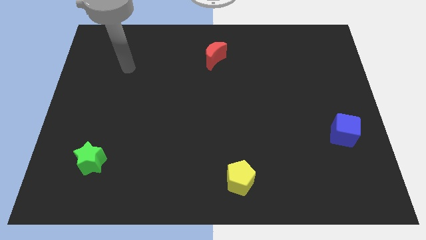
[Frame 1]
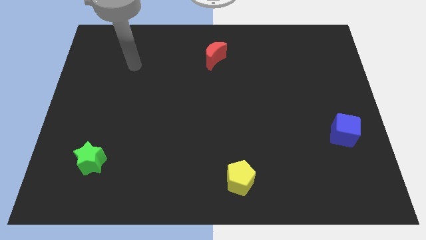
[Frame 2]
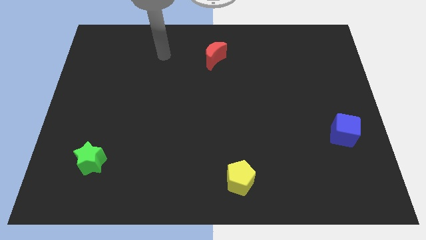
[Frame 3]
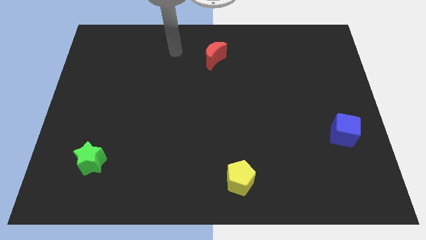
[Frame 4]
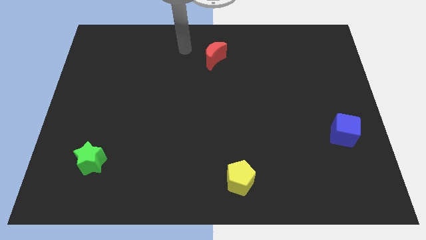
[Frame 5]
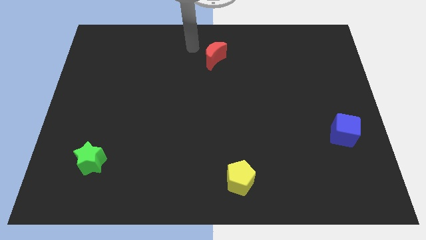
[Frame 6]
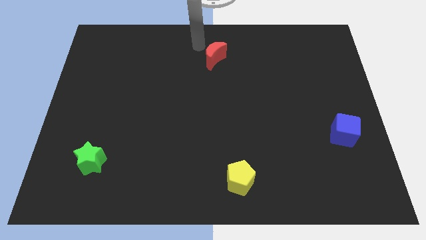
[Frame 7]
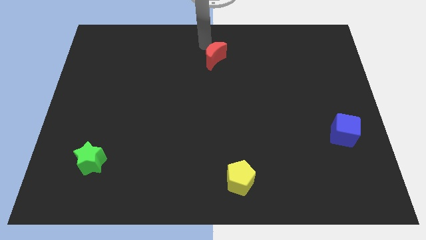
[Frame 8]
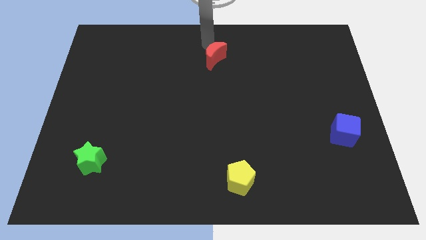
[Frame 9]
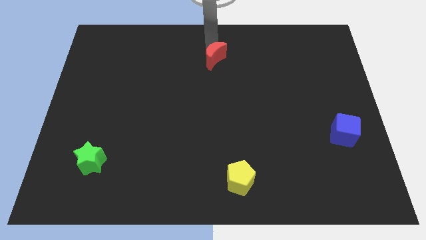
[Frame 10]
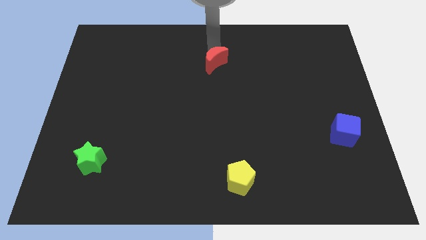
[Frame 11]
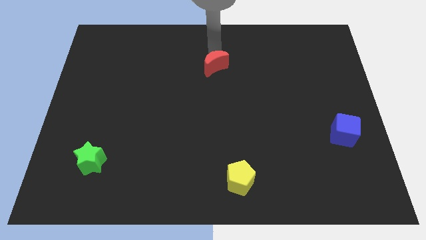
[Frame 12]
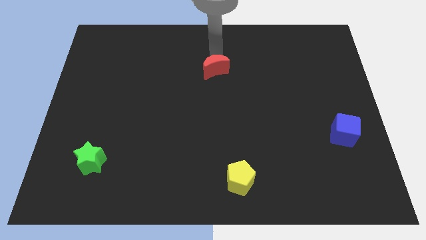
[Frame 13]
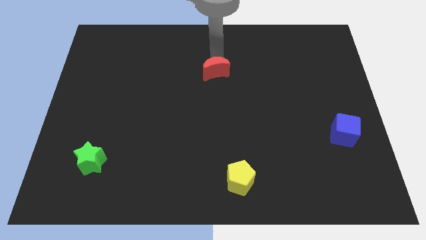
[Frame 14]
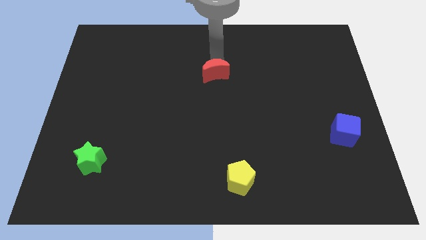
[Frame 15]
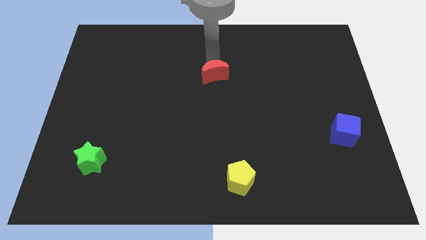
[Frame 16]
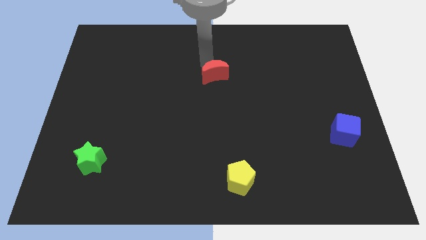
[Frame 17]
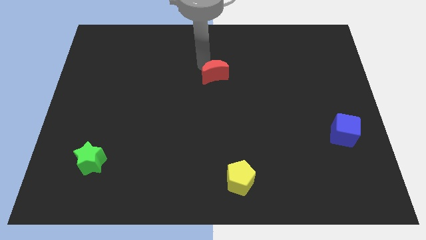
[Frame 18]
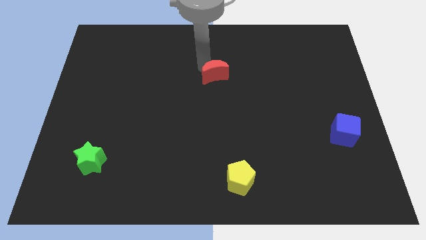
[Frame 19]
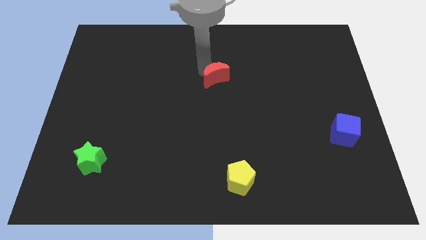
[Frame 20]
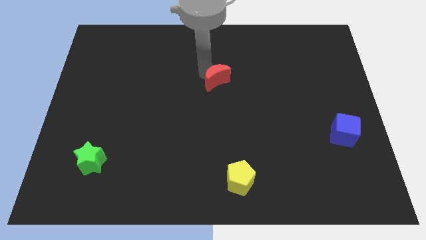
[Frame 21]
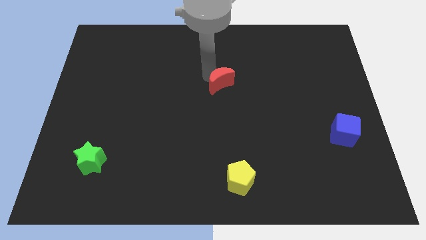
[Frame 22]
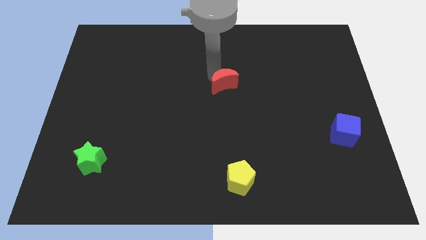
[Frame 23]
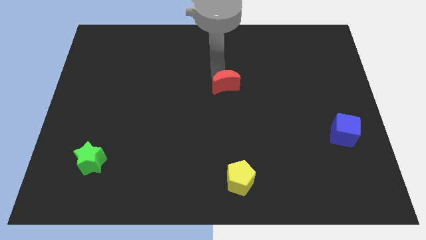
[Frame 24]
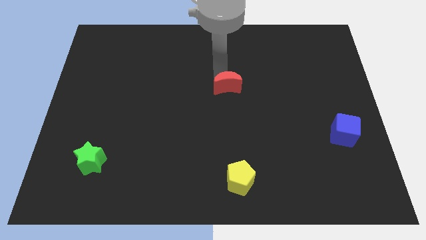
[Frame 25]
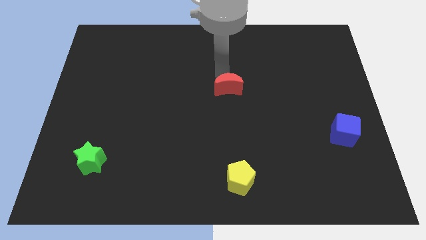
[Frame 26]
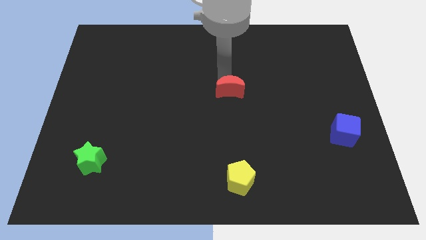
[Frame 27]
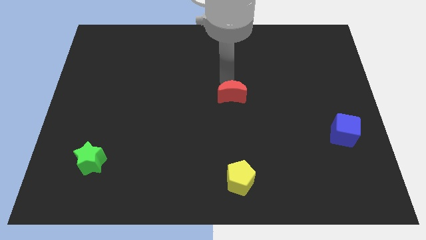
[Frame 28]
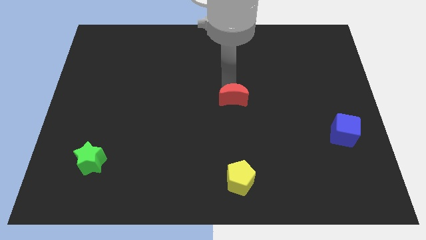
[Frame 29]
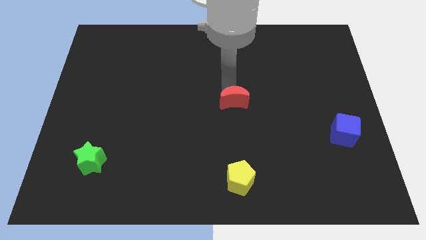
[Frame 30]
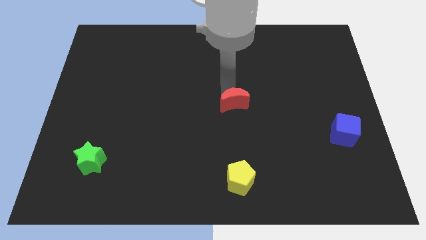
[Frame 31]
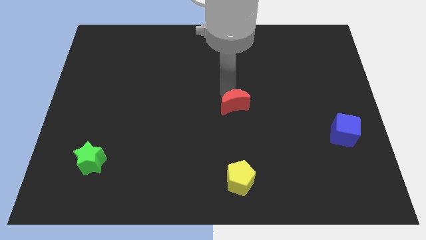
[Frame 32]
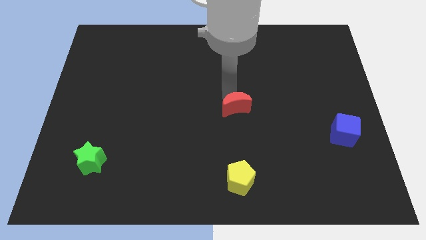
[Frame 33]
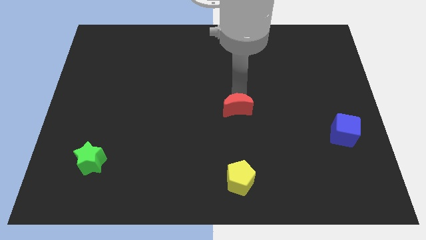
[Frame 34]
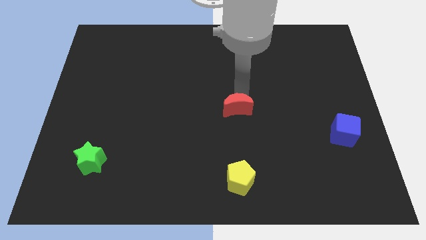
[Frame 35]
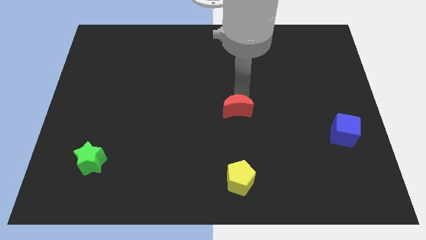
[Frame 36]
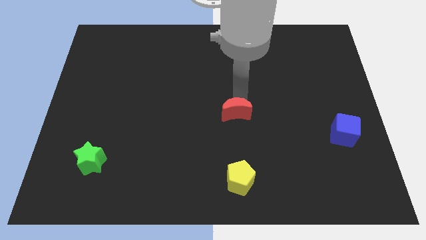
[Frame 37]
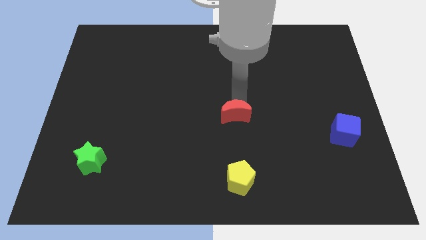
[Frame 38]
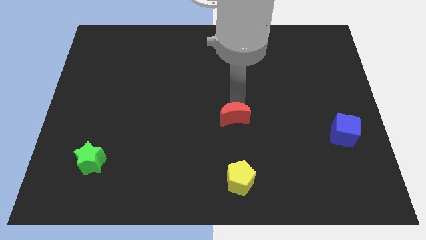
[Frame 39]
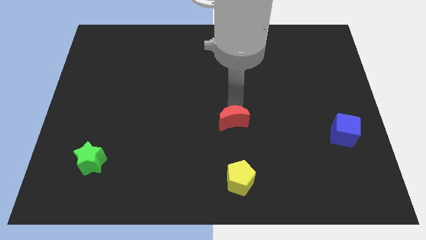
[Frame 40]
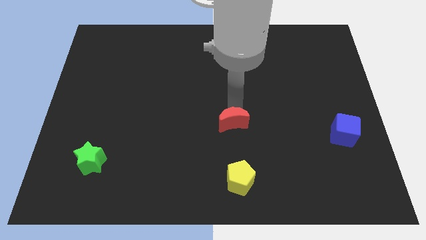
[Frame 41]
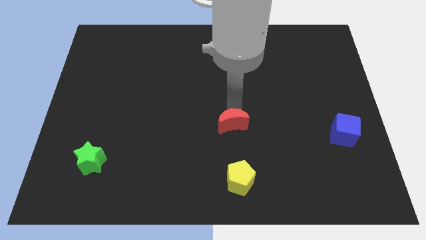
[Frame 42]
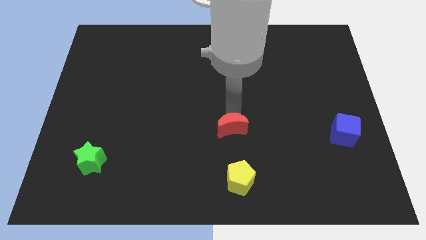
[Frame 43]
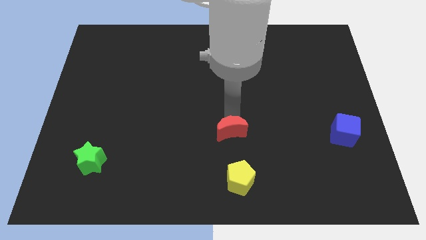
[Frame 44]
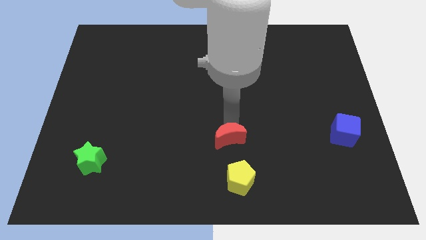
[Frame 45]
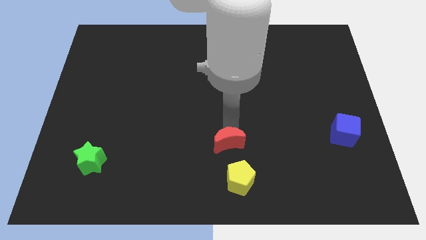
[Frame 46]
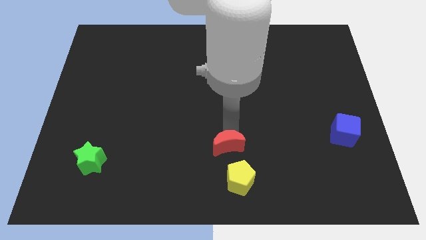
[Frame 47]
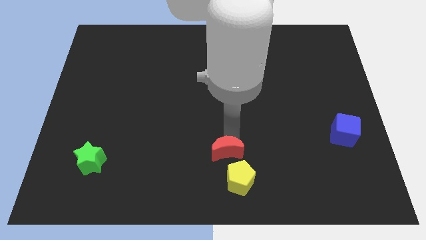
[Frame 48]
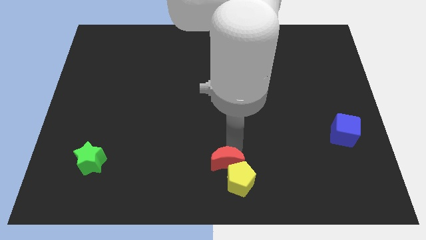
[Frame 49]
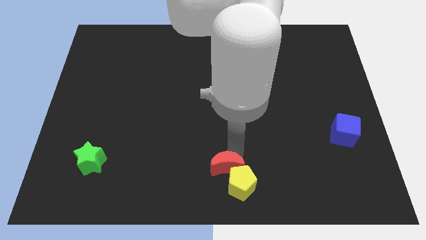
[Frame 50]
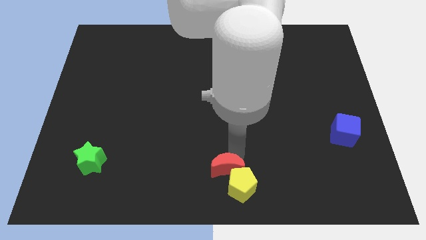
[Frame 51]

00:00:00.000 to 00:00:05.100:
push the red block towards the yellow pentagon

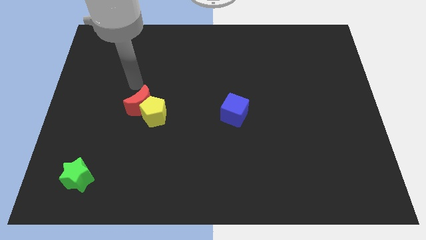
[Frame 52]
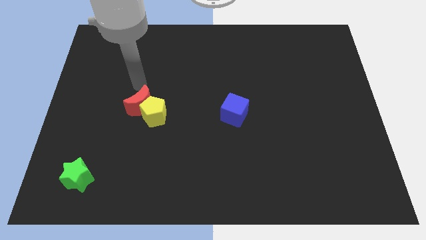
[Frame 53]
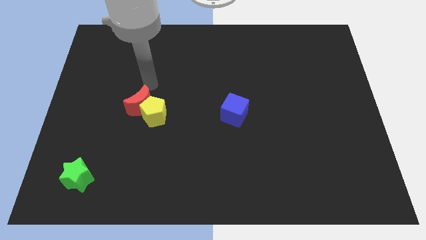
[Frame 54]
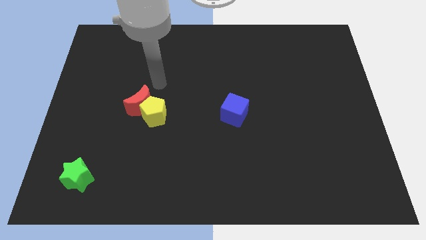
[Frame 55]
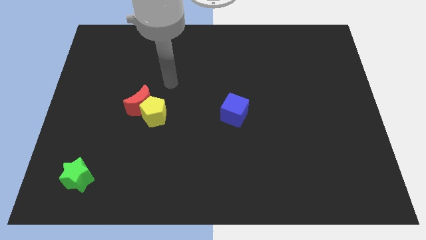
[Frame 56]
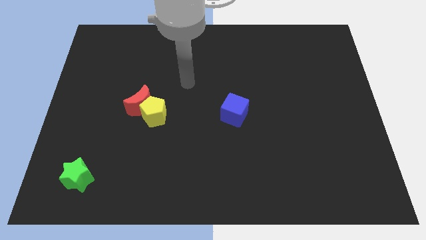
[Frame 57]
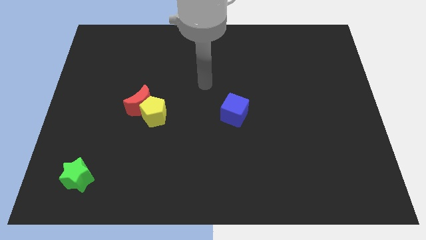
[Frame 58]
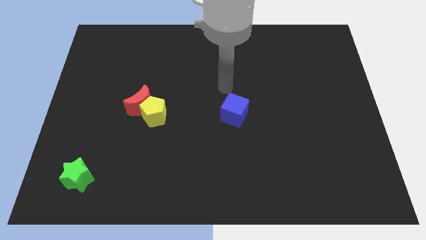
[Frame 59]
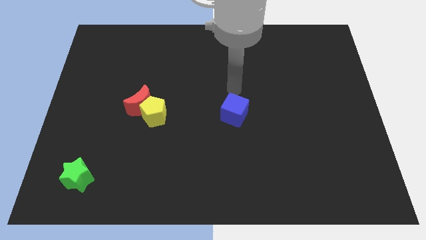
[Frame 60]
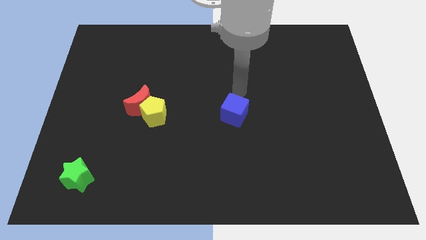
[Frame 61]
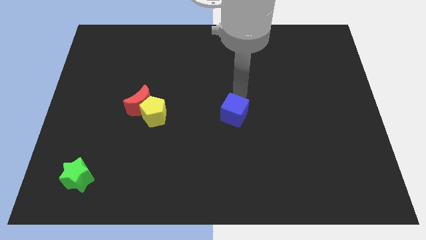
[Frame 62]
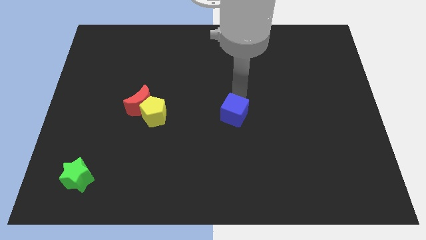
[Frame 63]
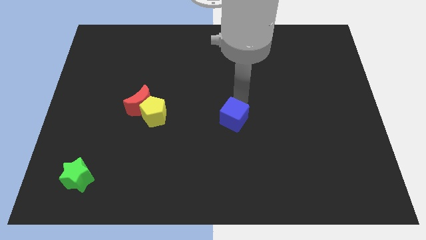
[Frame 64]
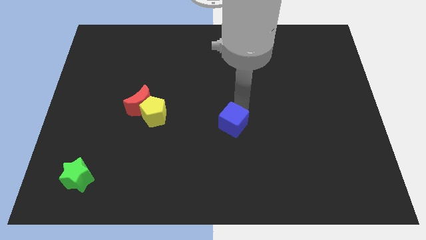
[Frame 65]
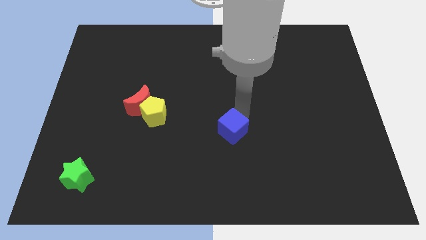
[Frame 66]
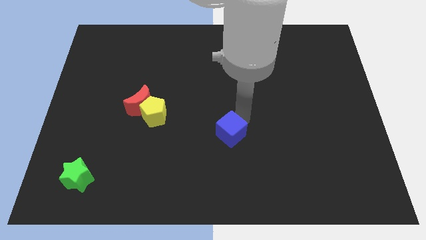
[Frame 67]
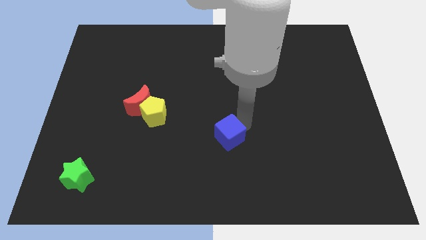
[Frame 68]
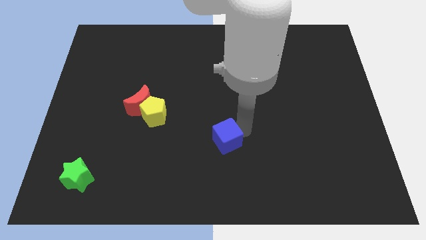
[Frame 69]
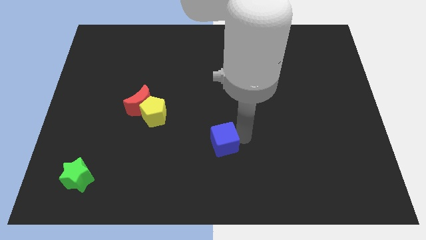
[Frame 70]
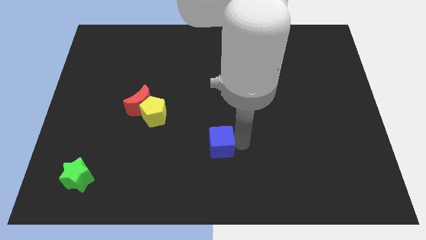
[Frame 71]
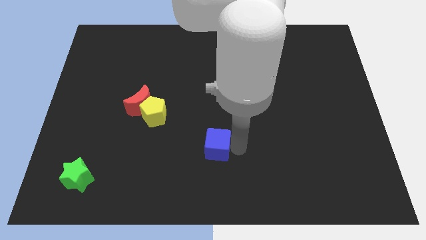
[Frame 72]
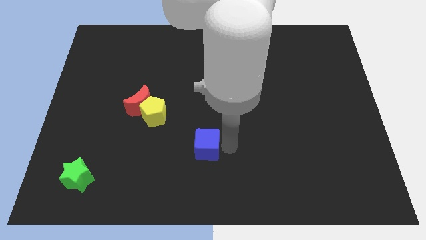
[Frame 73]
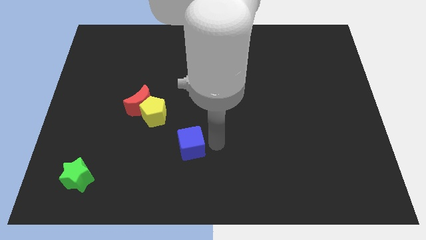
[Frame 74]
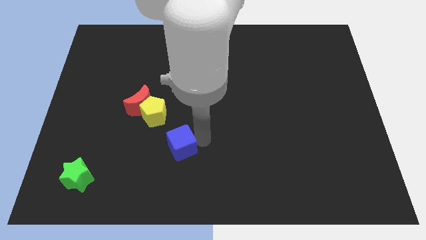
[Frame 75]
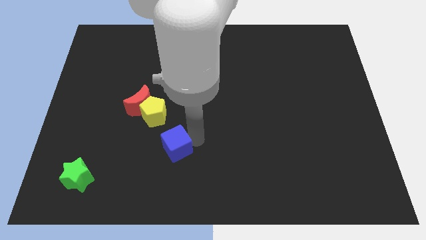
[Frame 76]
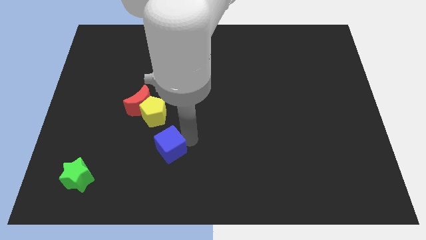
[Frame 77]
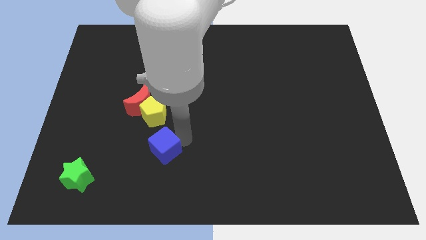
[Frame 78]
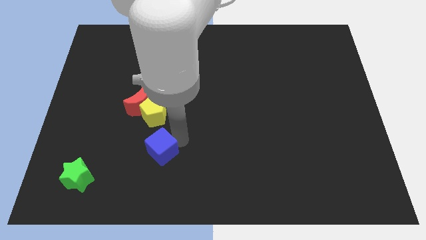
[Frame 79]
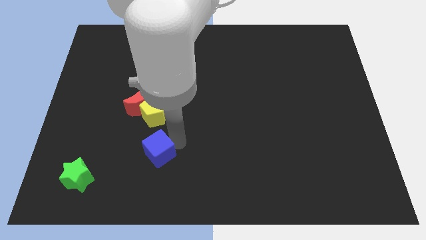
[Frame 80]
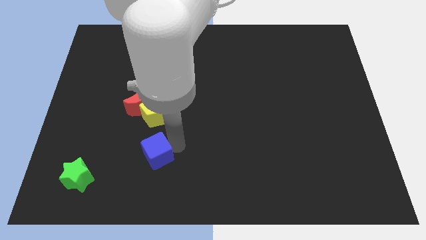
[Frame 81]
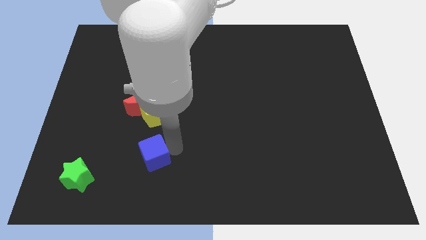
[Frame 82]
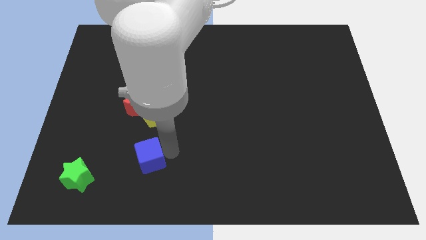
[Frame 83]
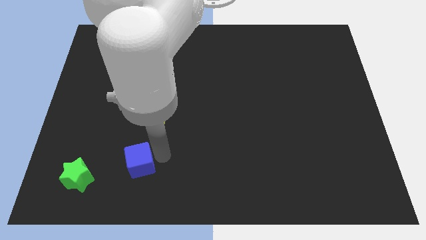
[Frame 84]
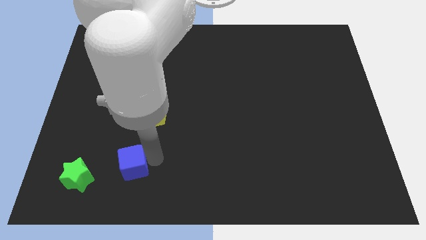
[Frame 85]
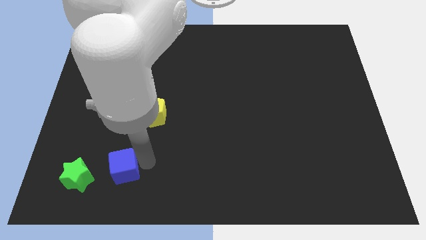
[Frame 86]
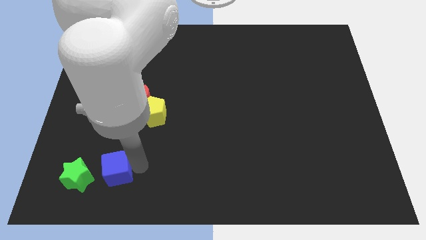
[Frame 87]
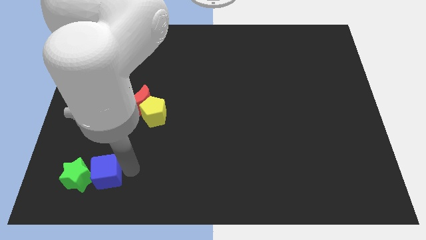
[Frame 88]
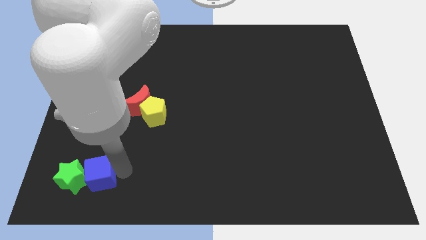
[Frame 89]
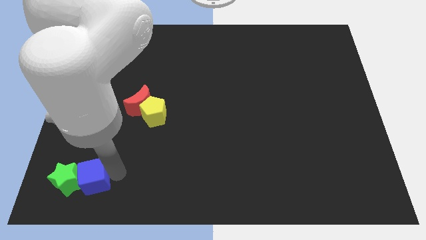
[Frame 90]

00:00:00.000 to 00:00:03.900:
push the cube close to the green block
